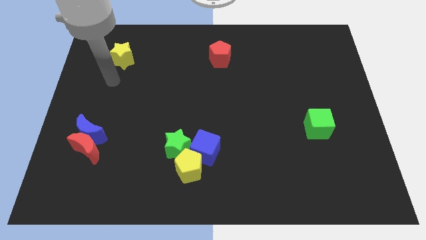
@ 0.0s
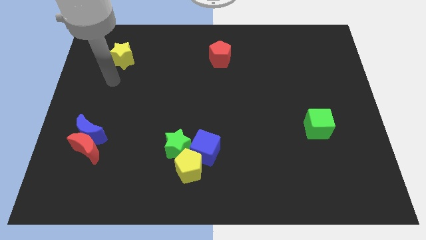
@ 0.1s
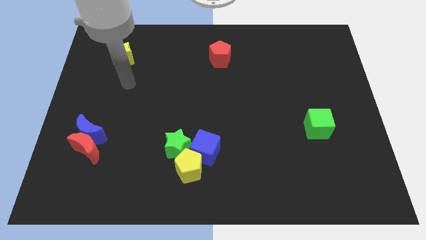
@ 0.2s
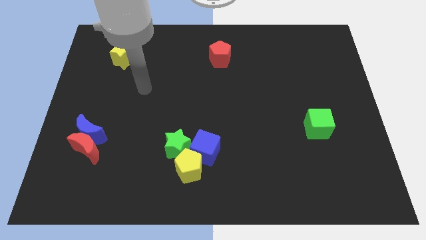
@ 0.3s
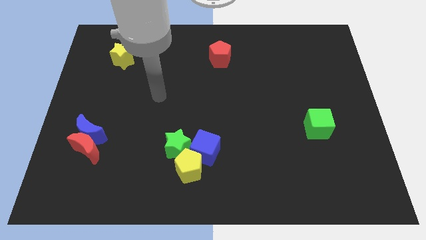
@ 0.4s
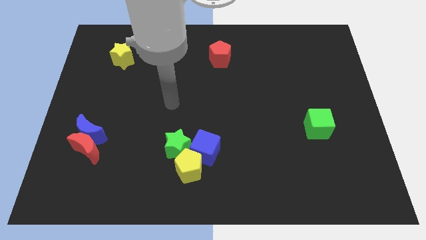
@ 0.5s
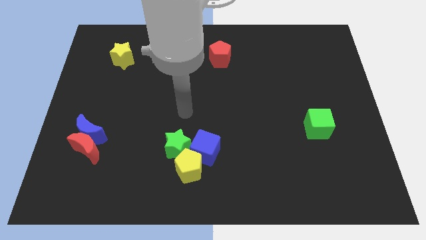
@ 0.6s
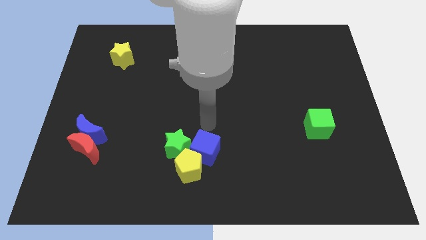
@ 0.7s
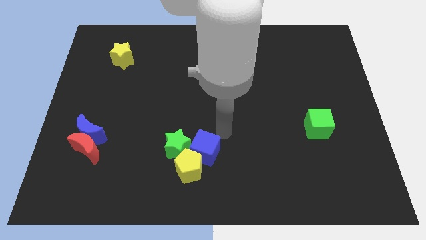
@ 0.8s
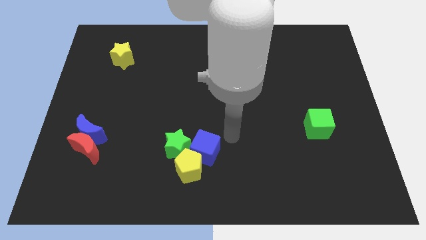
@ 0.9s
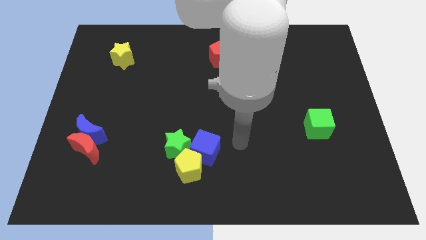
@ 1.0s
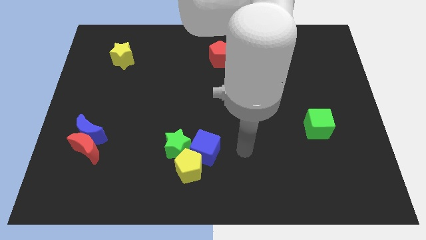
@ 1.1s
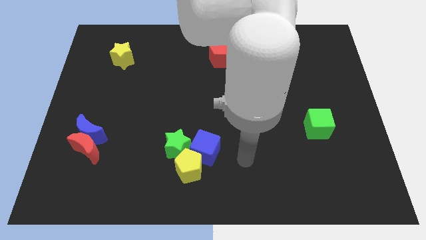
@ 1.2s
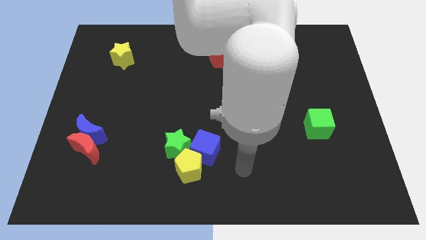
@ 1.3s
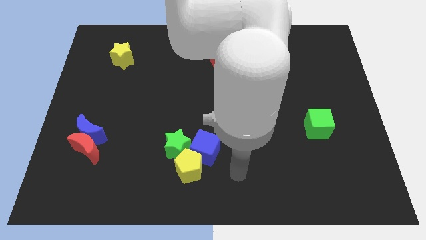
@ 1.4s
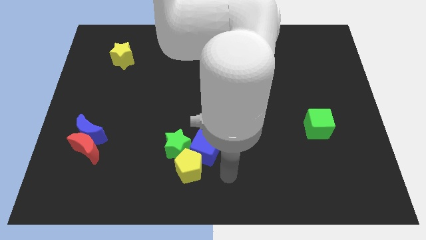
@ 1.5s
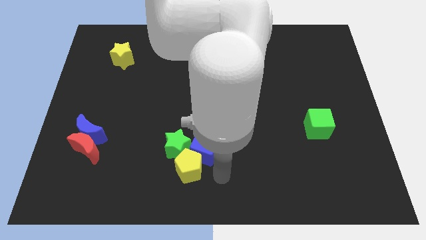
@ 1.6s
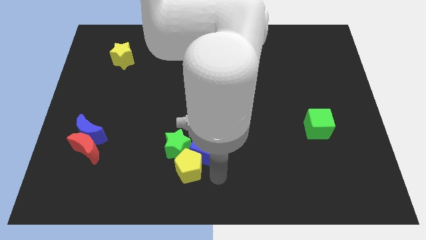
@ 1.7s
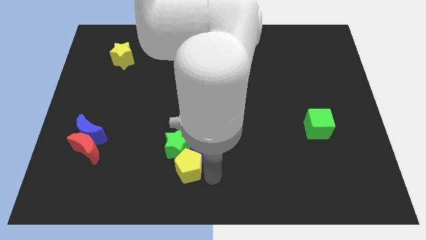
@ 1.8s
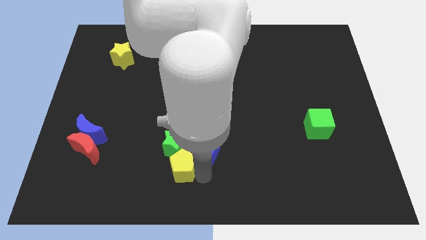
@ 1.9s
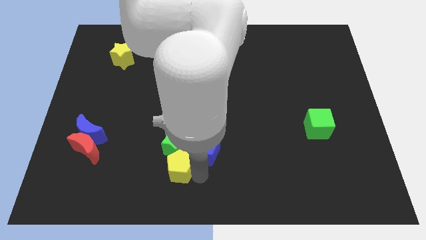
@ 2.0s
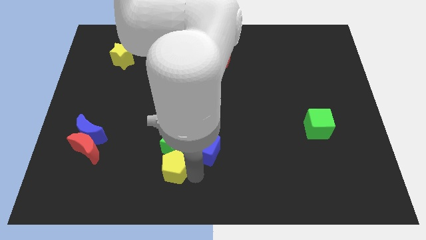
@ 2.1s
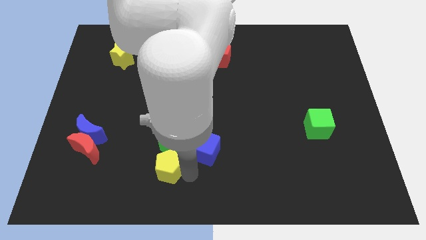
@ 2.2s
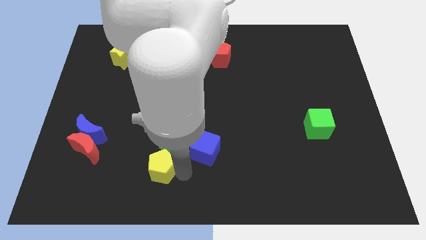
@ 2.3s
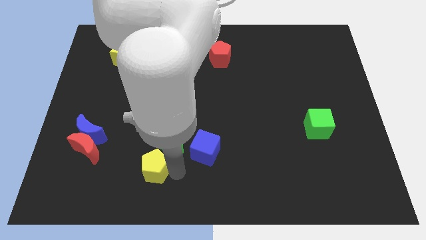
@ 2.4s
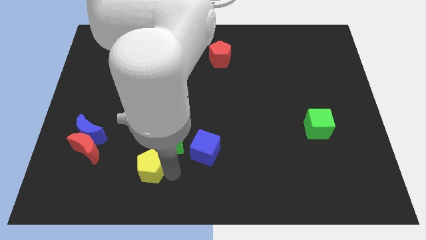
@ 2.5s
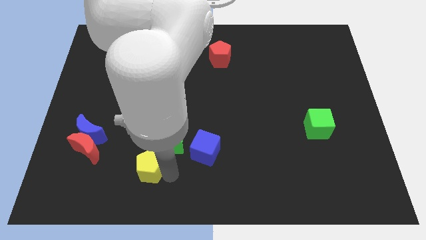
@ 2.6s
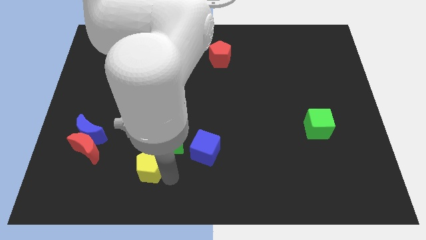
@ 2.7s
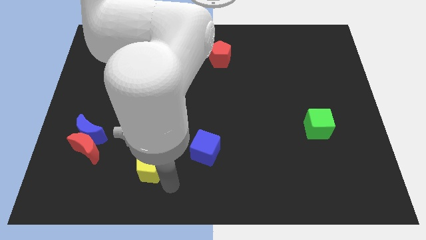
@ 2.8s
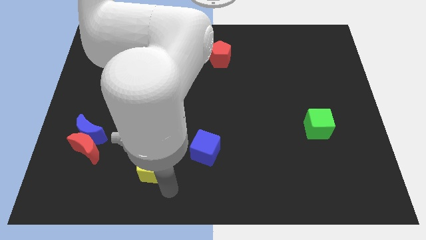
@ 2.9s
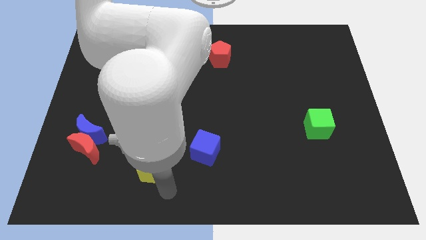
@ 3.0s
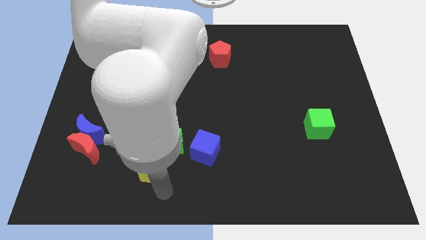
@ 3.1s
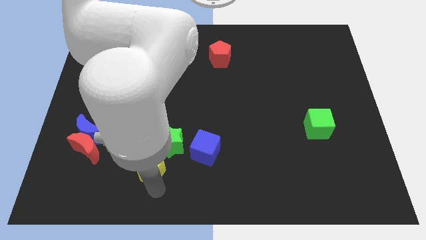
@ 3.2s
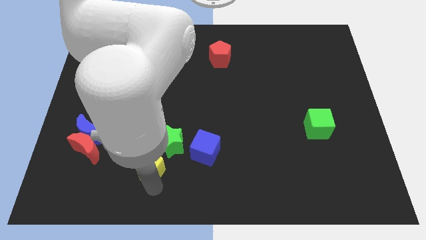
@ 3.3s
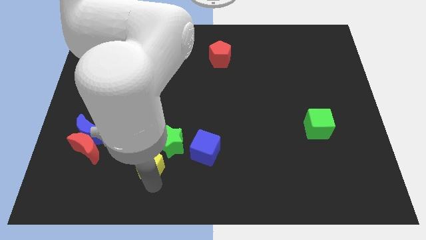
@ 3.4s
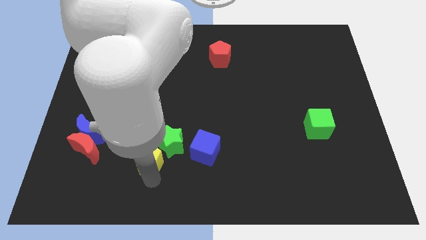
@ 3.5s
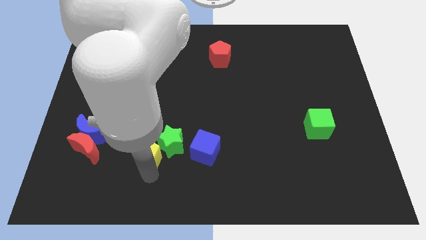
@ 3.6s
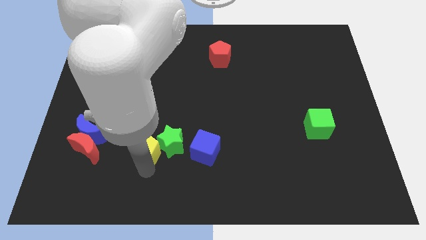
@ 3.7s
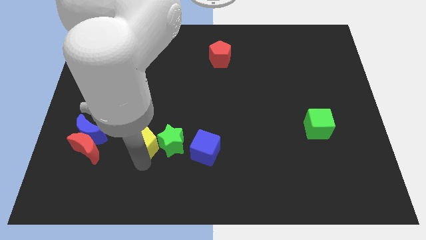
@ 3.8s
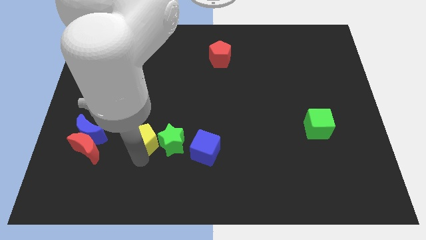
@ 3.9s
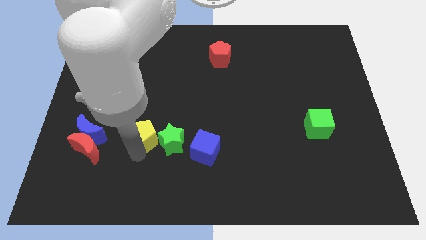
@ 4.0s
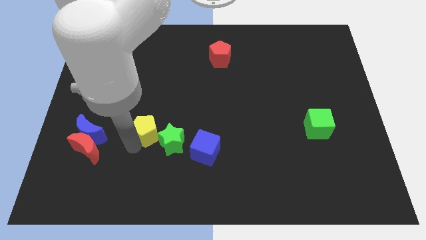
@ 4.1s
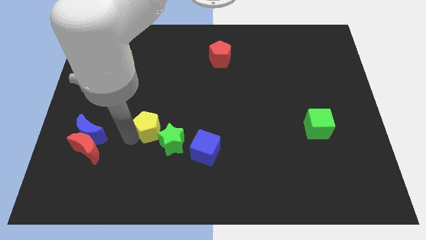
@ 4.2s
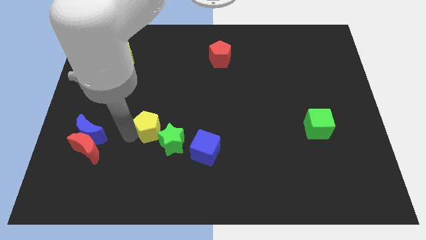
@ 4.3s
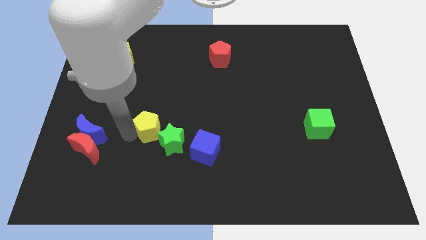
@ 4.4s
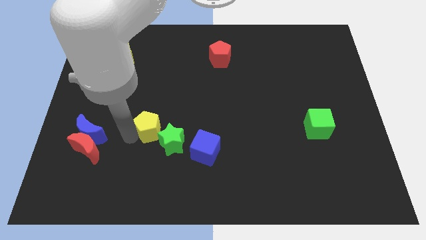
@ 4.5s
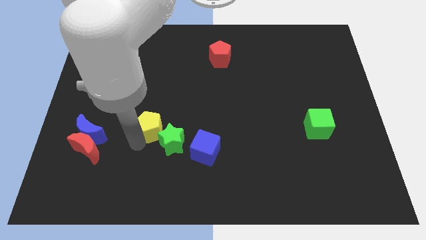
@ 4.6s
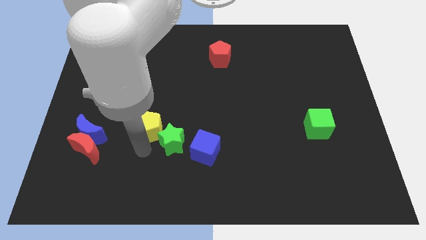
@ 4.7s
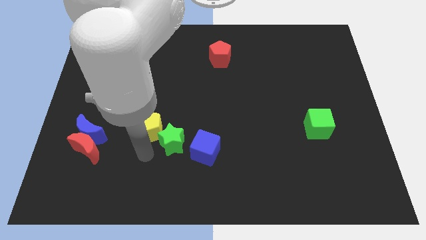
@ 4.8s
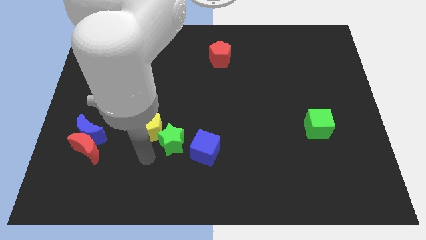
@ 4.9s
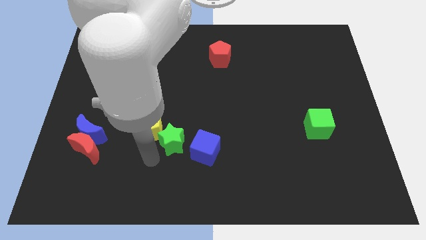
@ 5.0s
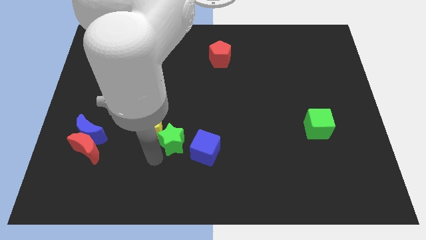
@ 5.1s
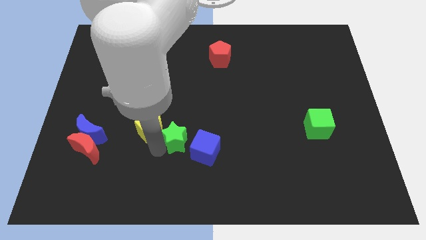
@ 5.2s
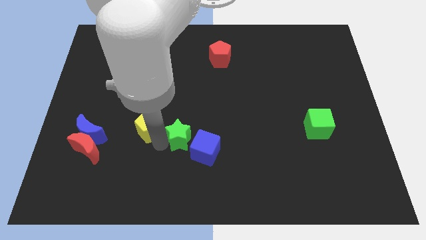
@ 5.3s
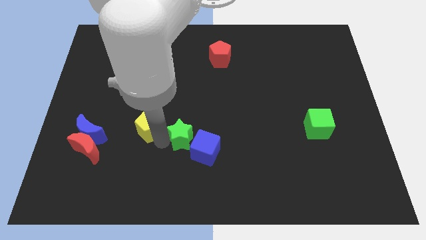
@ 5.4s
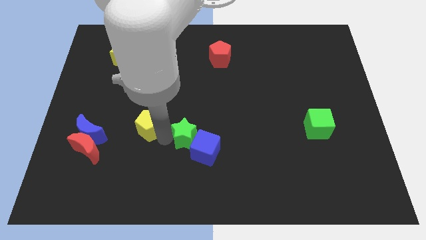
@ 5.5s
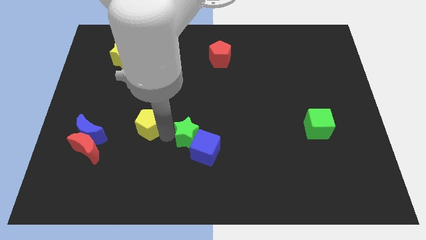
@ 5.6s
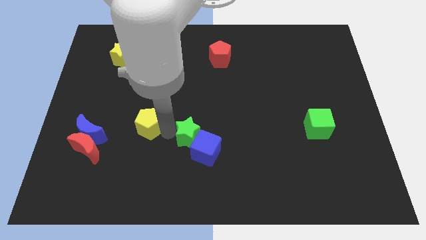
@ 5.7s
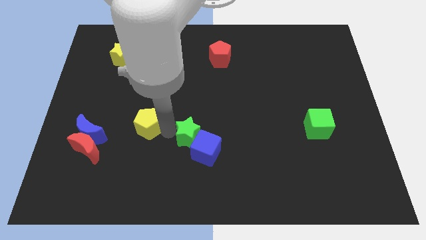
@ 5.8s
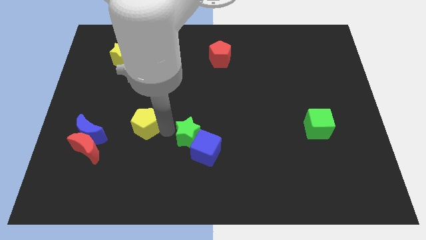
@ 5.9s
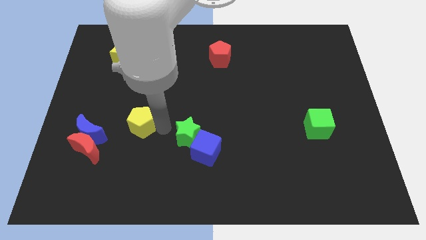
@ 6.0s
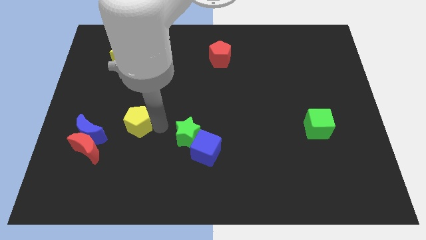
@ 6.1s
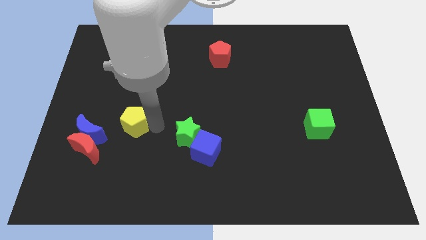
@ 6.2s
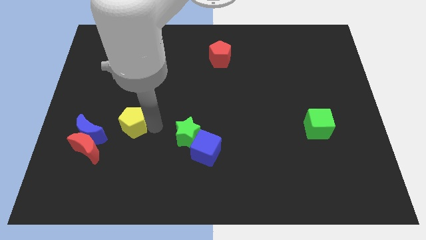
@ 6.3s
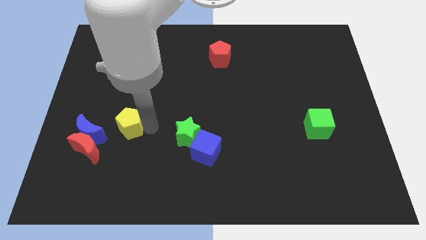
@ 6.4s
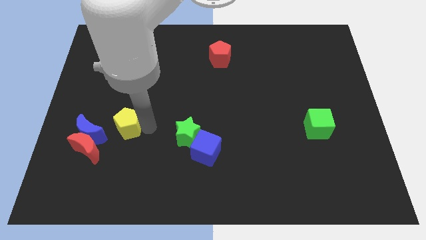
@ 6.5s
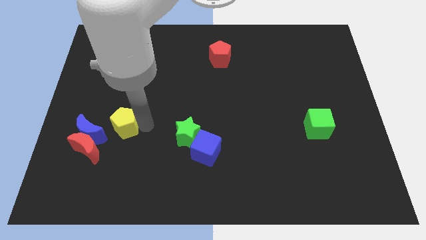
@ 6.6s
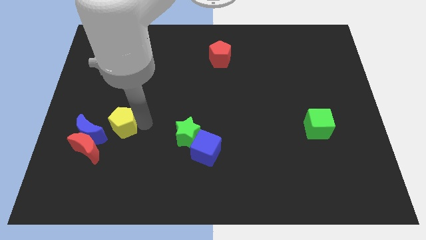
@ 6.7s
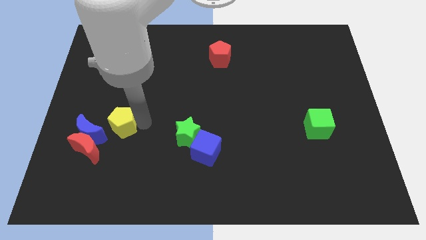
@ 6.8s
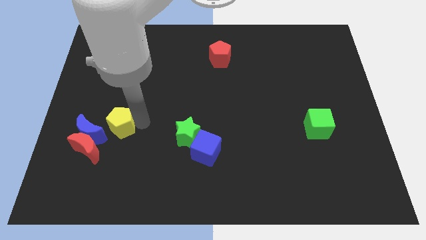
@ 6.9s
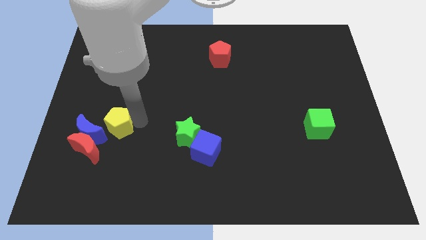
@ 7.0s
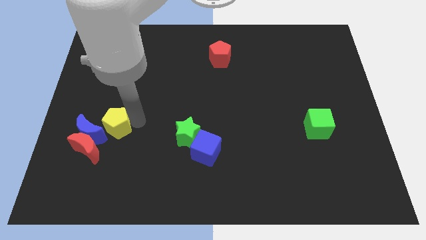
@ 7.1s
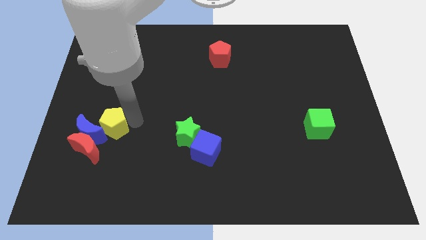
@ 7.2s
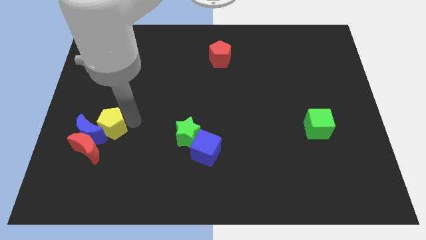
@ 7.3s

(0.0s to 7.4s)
put the yellow pentagon next to the blue moon

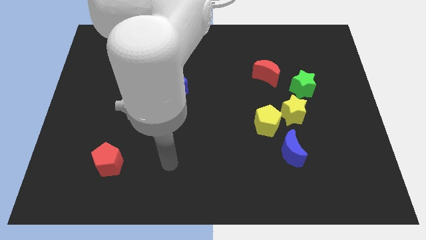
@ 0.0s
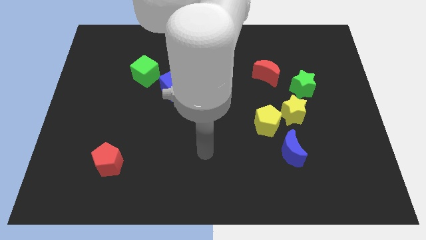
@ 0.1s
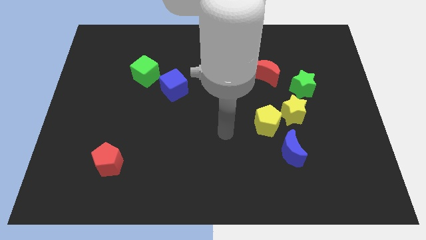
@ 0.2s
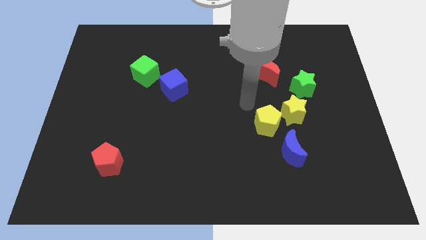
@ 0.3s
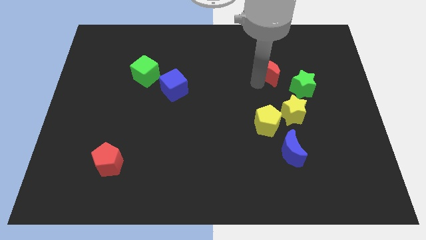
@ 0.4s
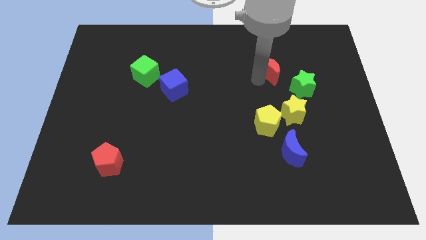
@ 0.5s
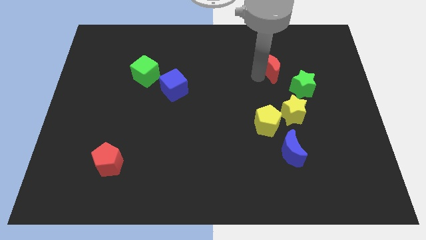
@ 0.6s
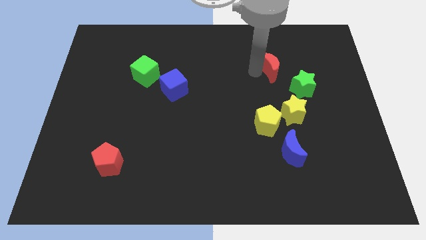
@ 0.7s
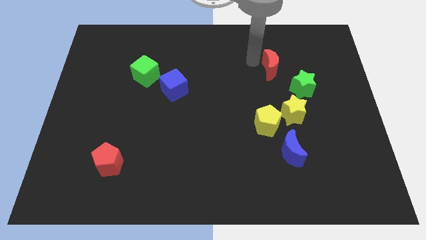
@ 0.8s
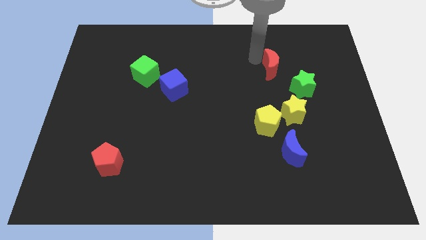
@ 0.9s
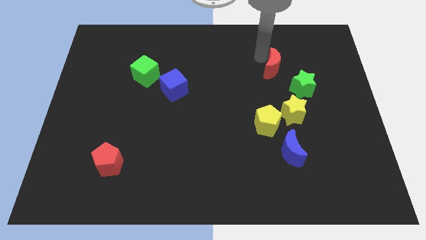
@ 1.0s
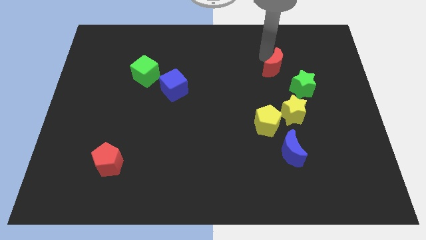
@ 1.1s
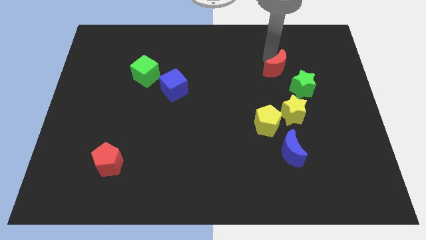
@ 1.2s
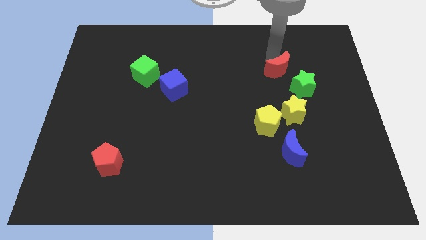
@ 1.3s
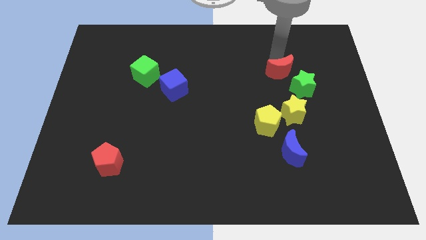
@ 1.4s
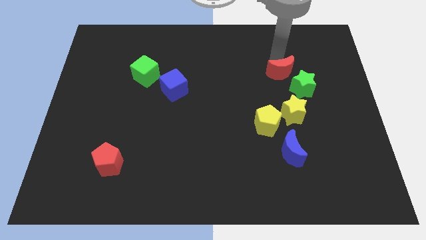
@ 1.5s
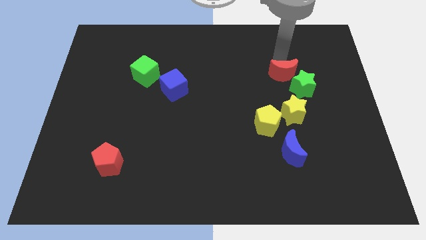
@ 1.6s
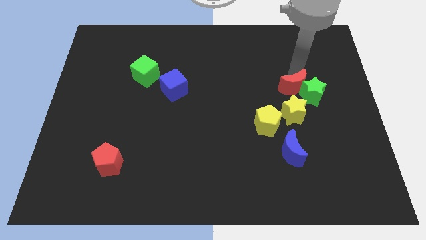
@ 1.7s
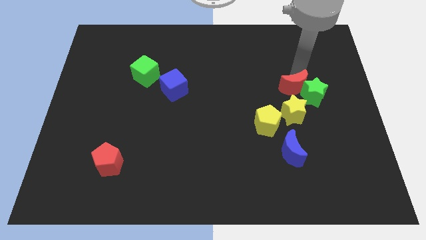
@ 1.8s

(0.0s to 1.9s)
move the red moon to the green star
